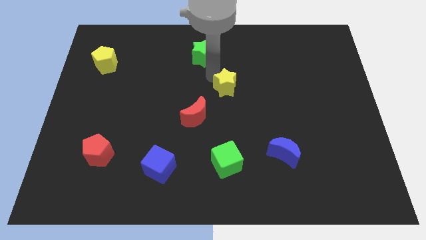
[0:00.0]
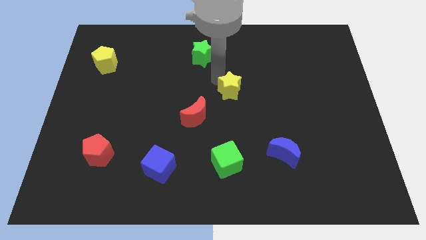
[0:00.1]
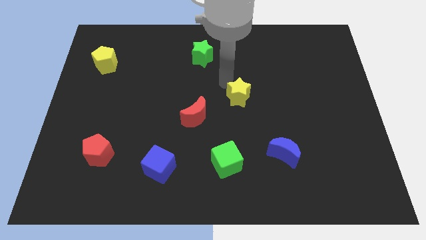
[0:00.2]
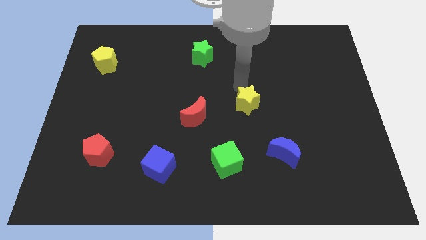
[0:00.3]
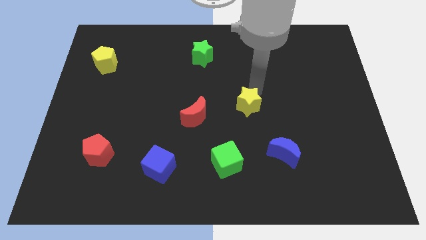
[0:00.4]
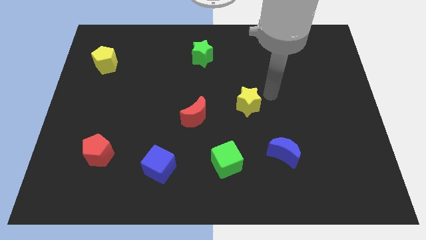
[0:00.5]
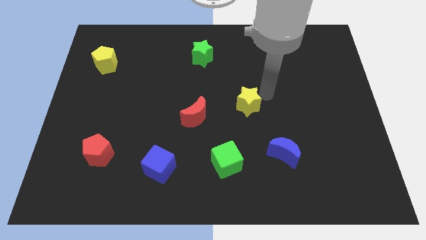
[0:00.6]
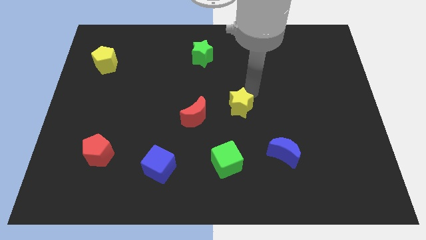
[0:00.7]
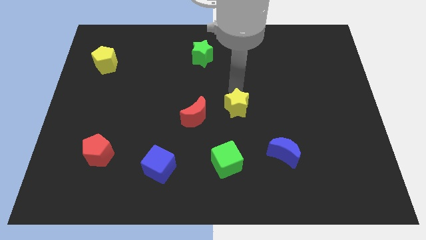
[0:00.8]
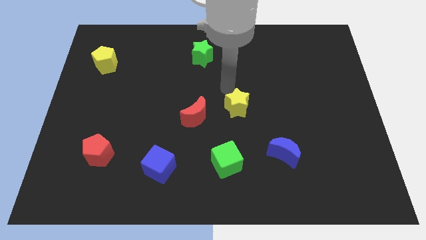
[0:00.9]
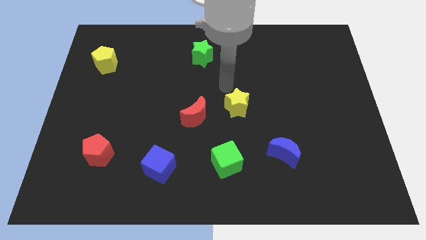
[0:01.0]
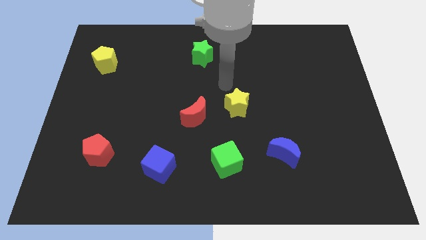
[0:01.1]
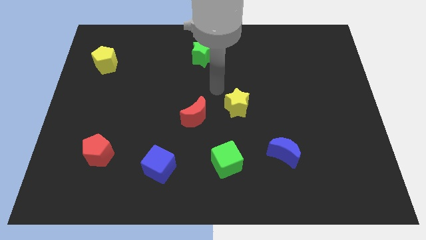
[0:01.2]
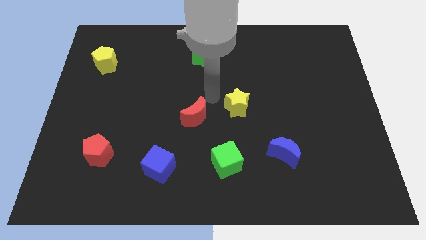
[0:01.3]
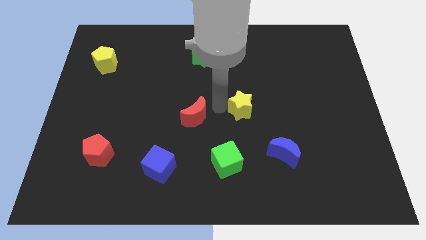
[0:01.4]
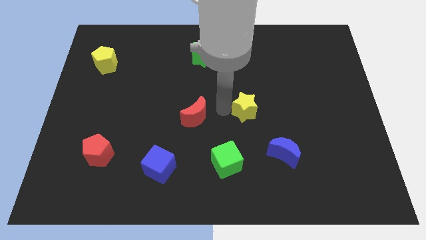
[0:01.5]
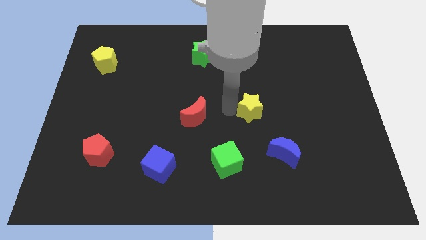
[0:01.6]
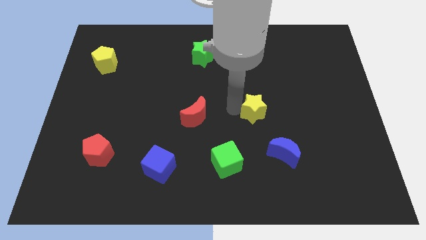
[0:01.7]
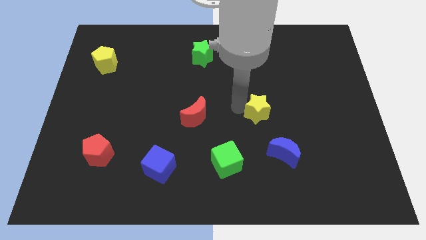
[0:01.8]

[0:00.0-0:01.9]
place the yellow star at the right of the red moon

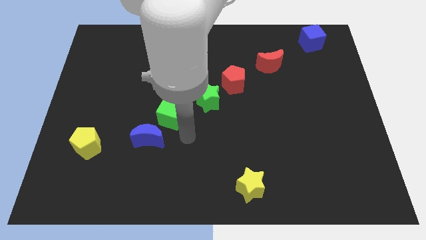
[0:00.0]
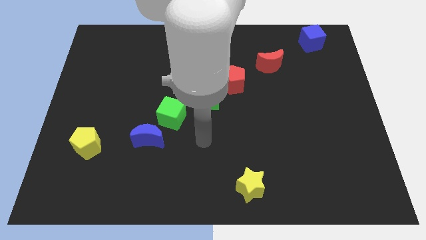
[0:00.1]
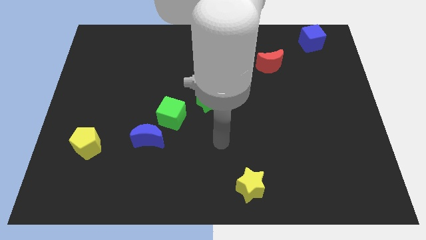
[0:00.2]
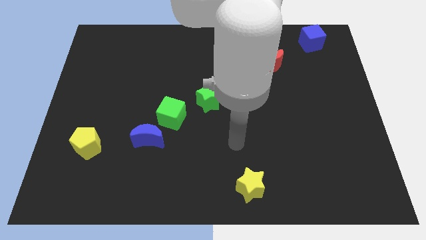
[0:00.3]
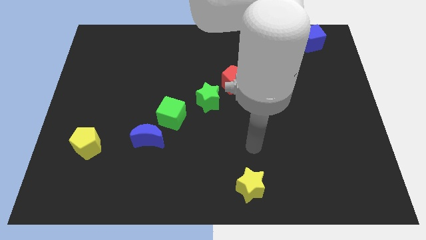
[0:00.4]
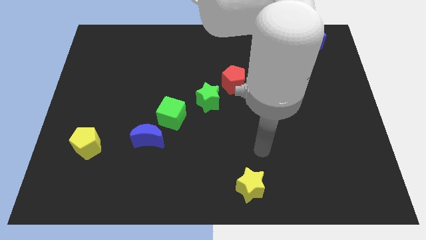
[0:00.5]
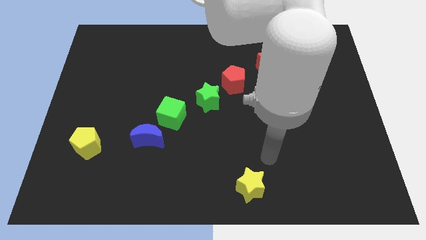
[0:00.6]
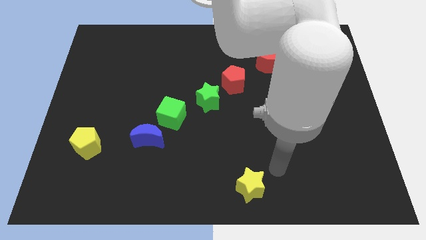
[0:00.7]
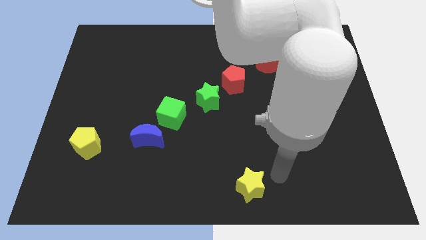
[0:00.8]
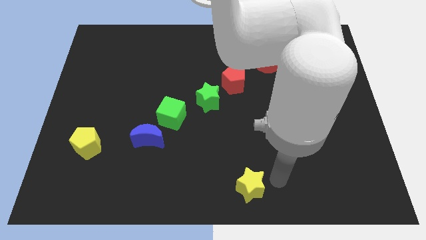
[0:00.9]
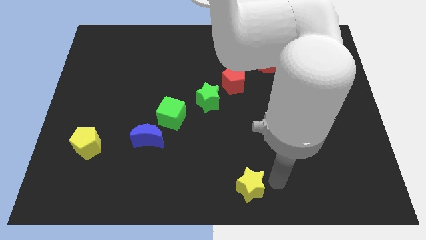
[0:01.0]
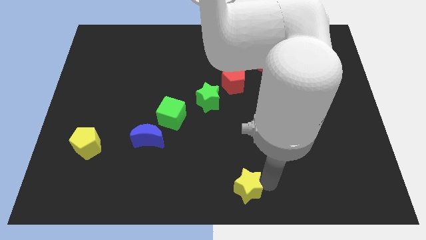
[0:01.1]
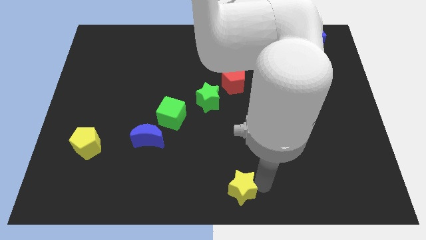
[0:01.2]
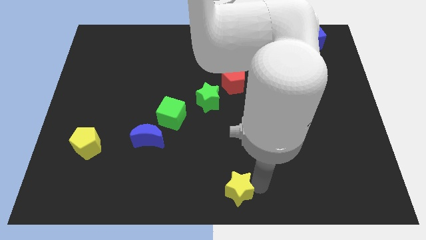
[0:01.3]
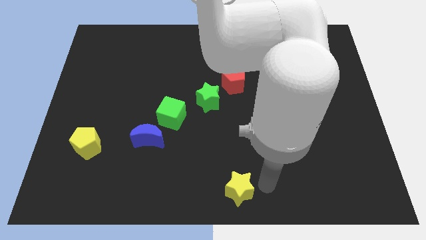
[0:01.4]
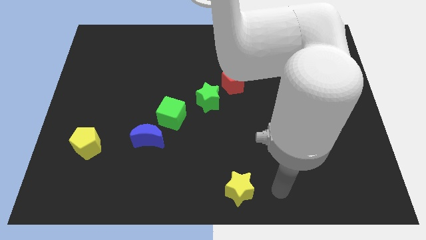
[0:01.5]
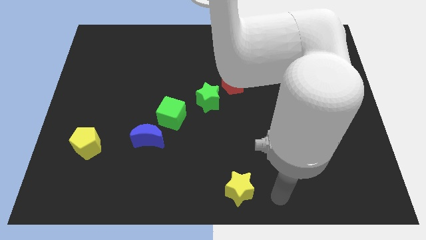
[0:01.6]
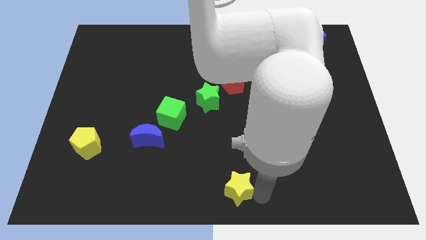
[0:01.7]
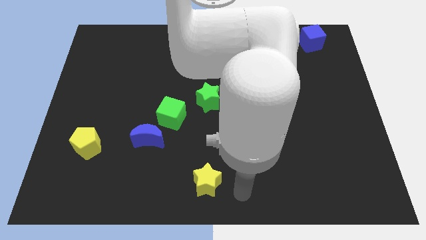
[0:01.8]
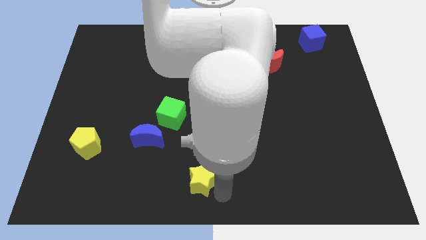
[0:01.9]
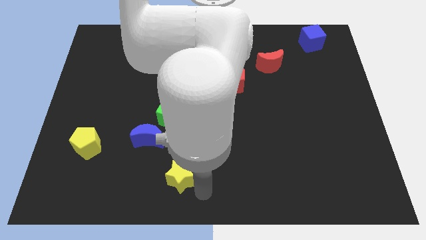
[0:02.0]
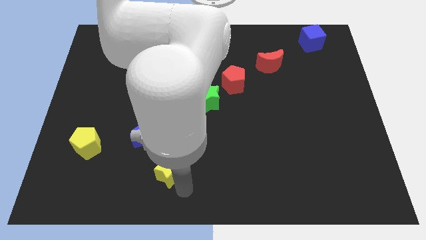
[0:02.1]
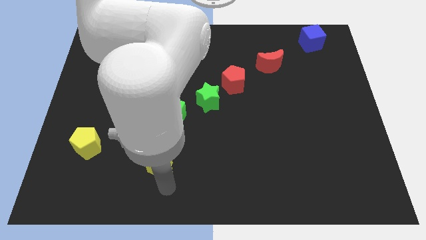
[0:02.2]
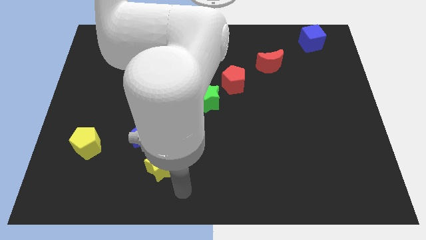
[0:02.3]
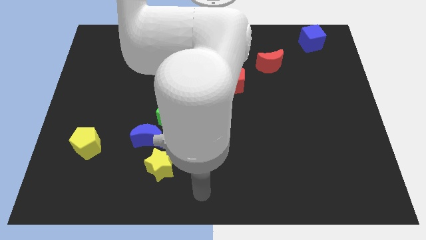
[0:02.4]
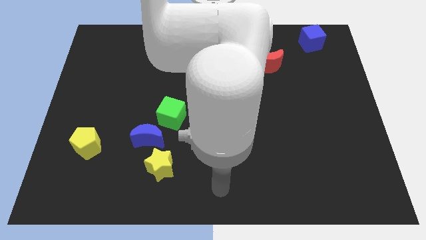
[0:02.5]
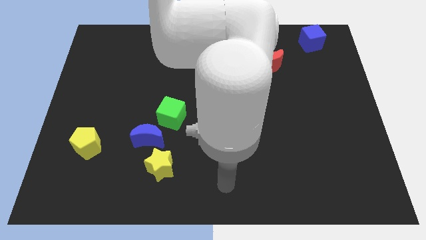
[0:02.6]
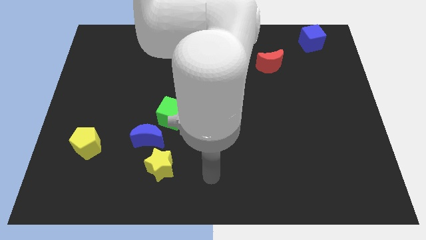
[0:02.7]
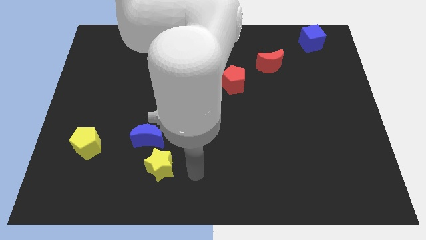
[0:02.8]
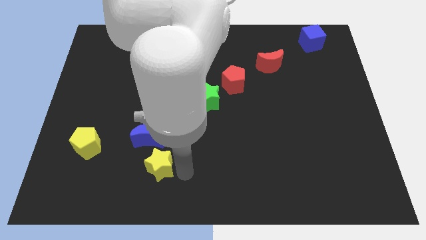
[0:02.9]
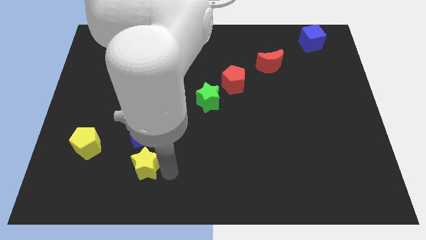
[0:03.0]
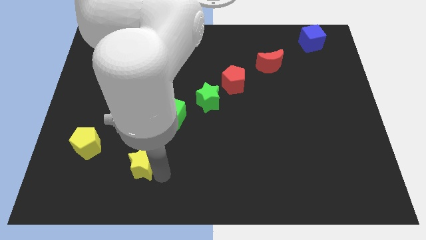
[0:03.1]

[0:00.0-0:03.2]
move the yellow star below the blue crescent

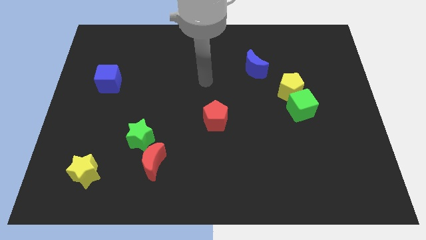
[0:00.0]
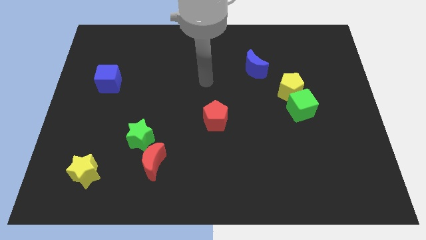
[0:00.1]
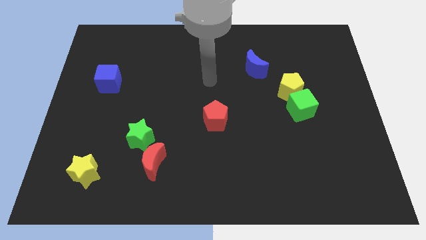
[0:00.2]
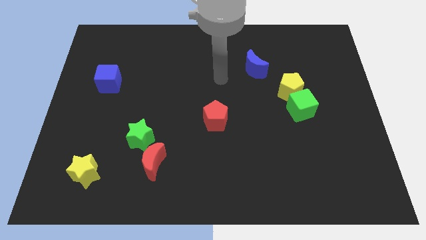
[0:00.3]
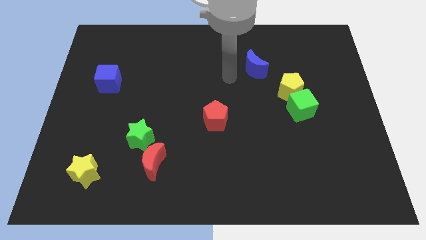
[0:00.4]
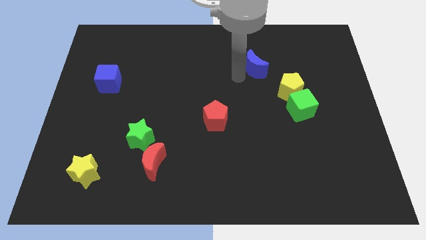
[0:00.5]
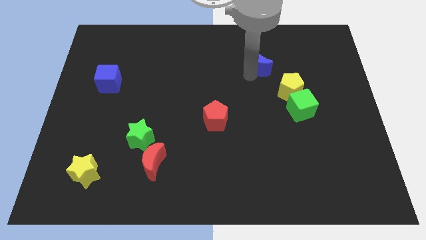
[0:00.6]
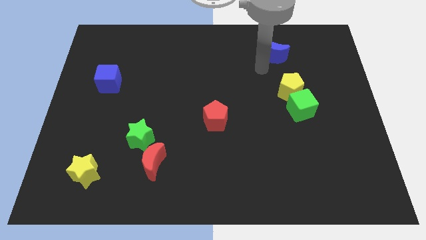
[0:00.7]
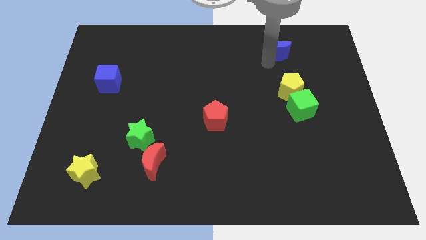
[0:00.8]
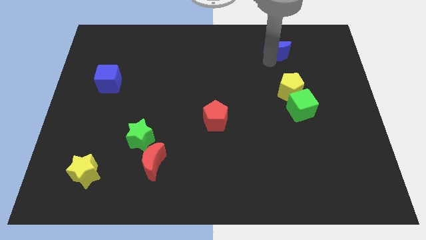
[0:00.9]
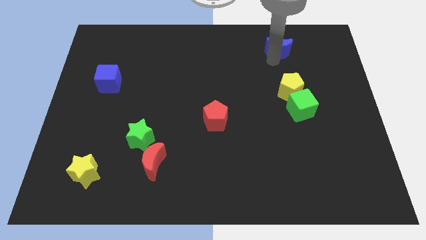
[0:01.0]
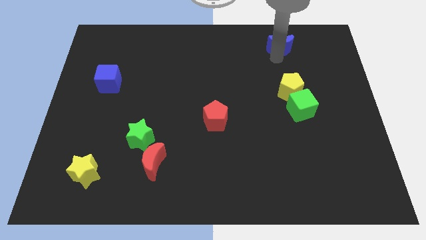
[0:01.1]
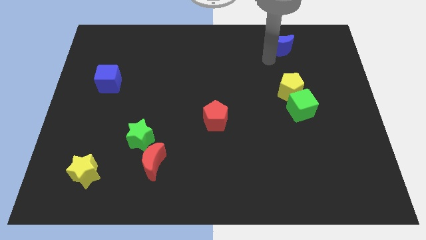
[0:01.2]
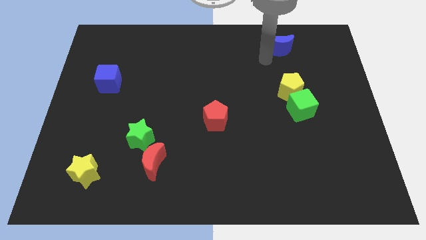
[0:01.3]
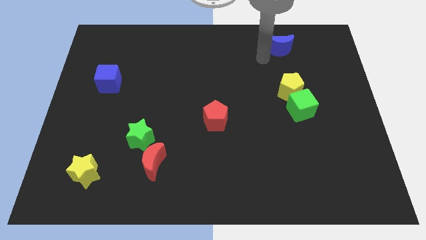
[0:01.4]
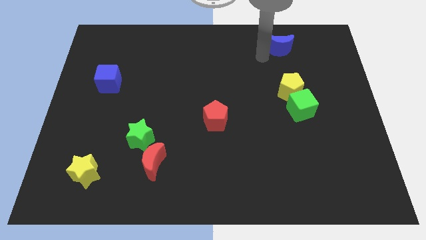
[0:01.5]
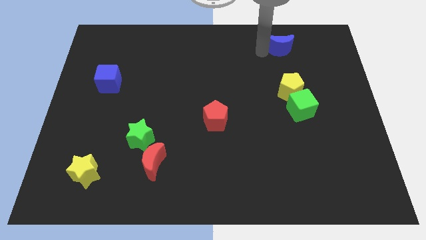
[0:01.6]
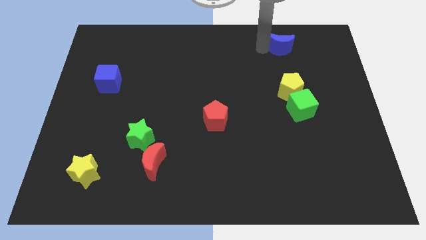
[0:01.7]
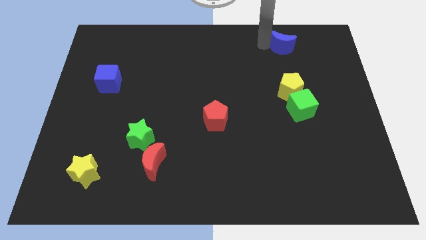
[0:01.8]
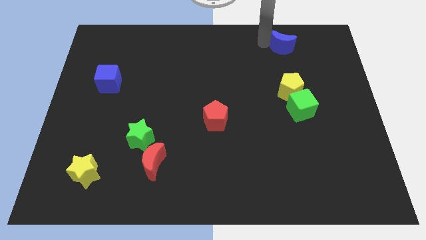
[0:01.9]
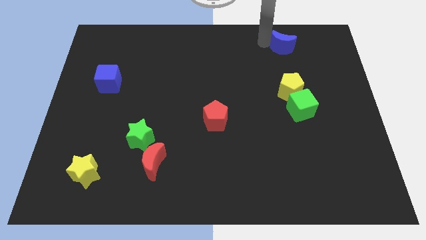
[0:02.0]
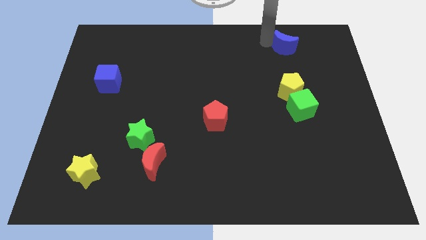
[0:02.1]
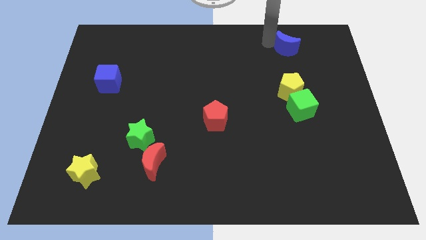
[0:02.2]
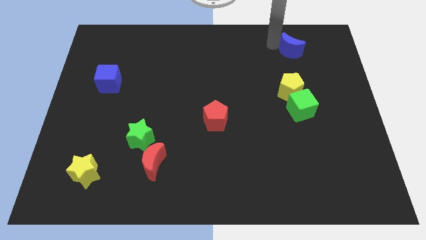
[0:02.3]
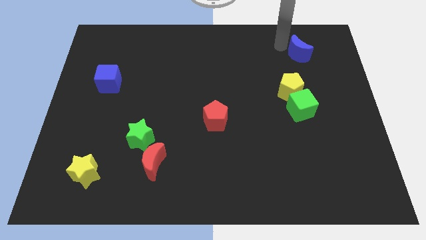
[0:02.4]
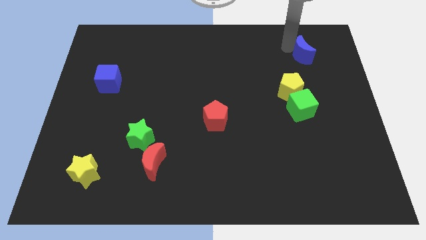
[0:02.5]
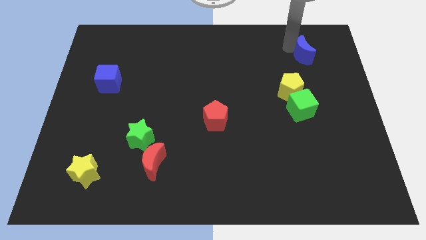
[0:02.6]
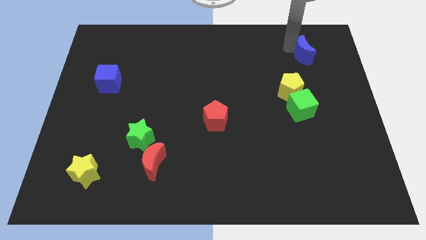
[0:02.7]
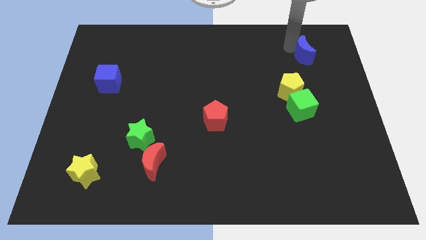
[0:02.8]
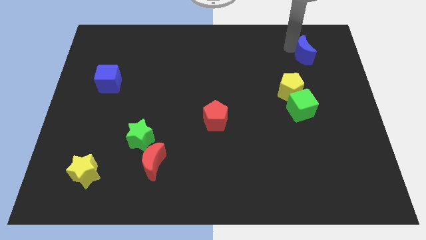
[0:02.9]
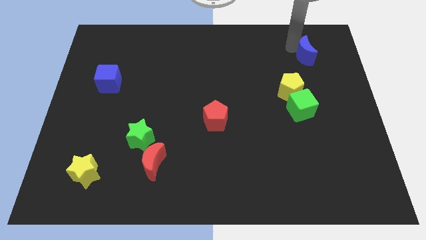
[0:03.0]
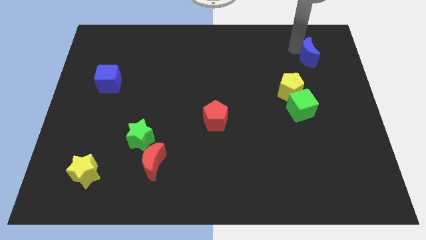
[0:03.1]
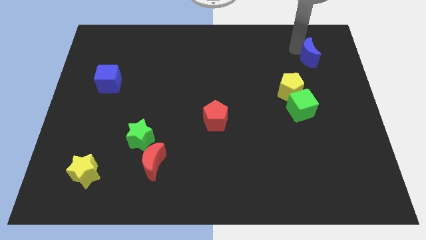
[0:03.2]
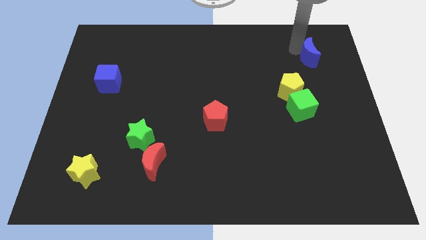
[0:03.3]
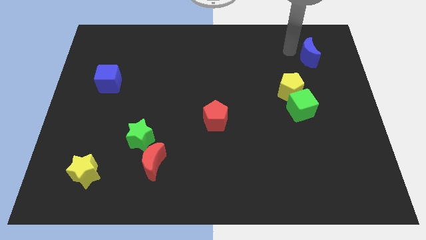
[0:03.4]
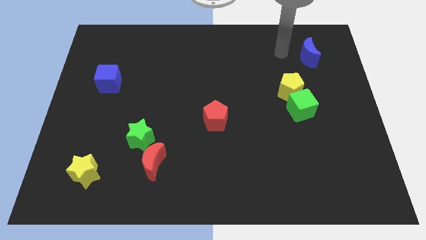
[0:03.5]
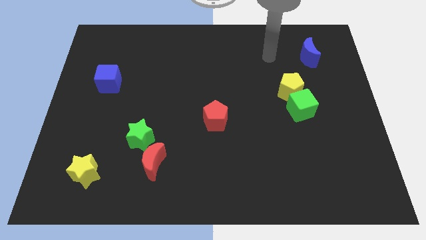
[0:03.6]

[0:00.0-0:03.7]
move the blue moon to the right

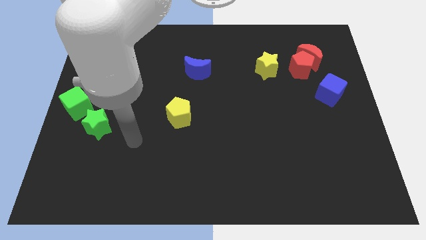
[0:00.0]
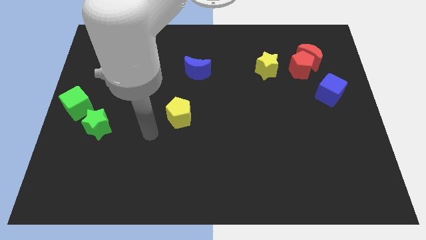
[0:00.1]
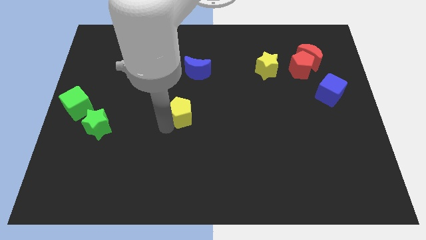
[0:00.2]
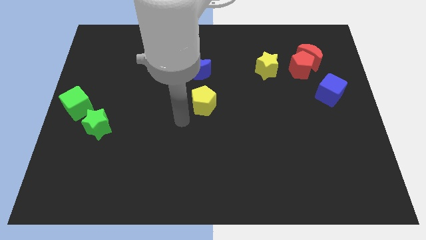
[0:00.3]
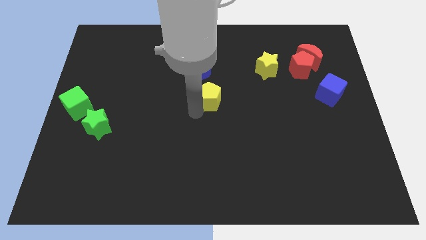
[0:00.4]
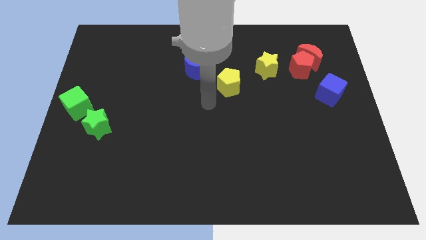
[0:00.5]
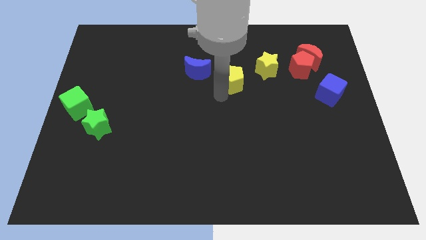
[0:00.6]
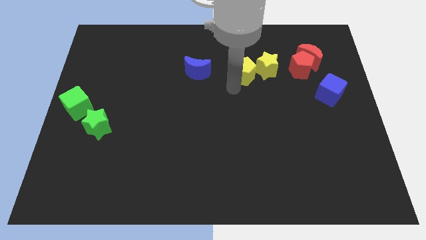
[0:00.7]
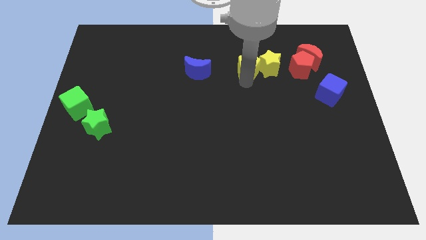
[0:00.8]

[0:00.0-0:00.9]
place the yellow pentagon left to the yellow star
